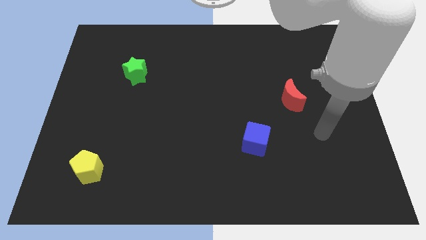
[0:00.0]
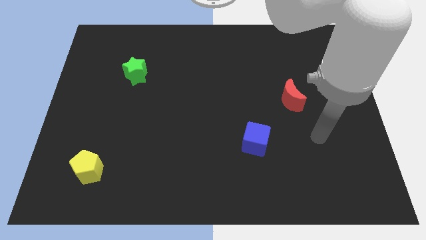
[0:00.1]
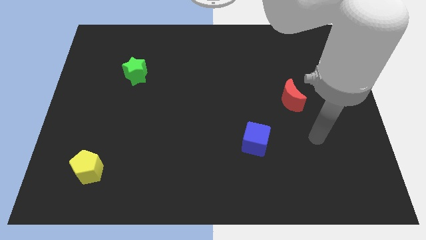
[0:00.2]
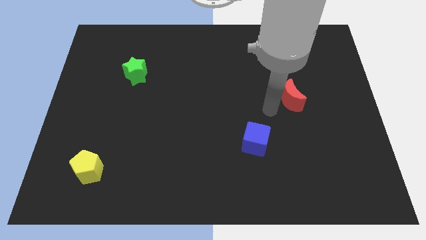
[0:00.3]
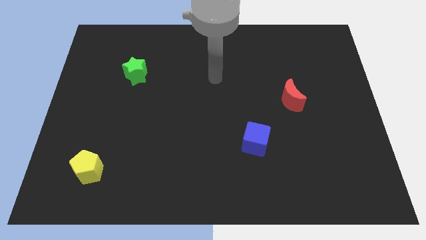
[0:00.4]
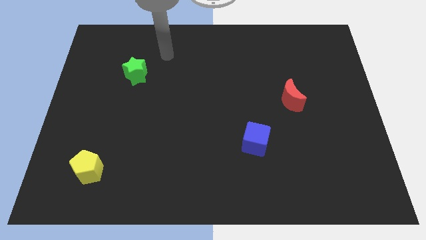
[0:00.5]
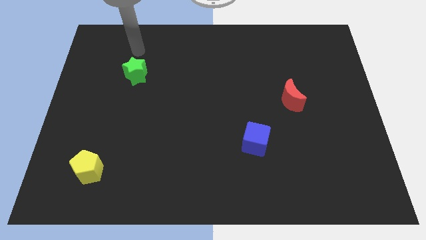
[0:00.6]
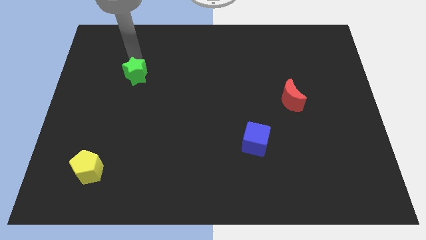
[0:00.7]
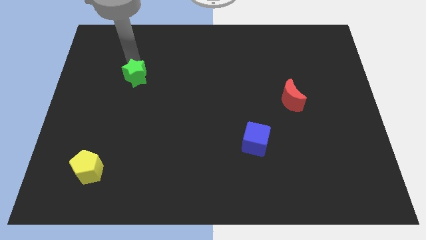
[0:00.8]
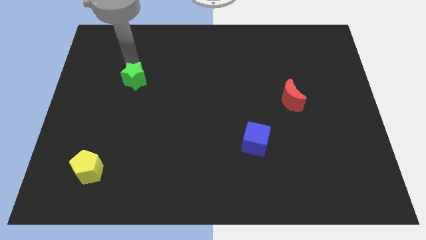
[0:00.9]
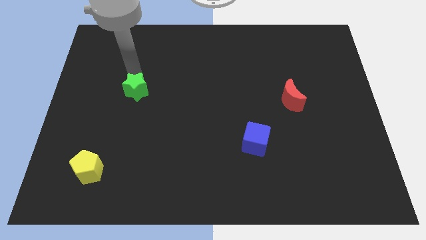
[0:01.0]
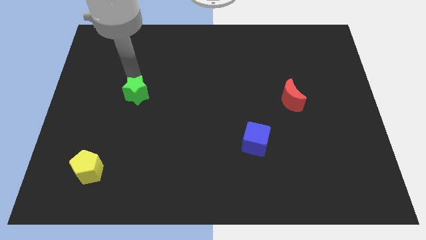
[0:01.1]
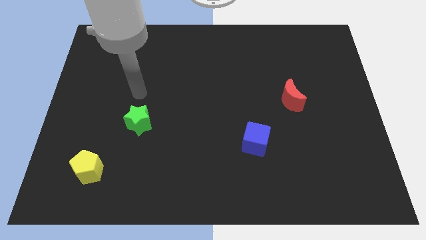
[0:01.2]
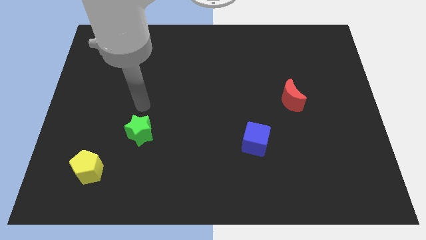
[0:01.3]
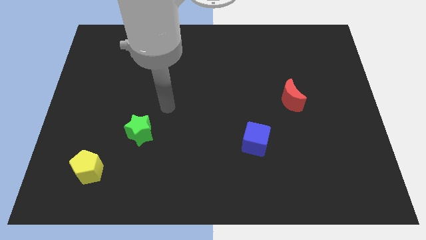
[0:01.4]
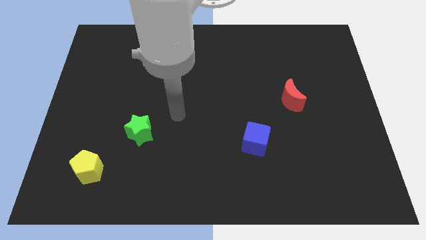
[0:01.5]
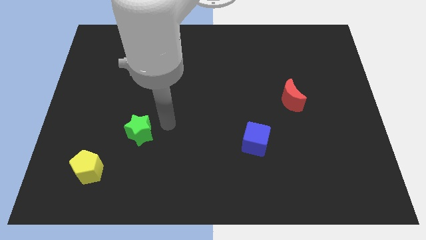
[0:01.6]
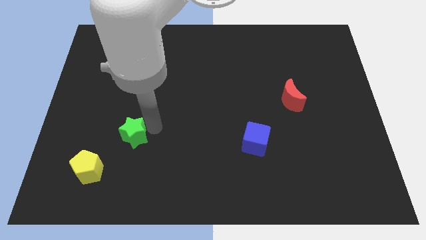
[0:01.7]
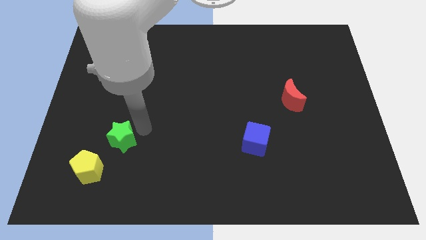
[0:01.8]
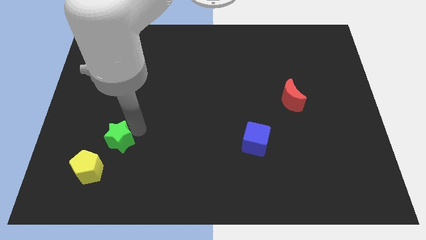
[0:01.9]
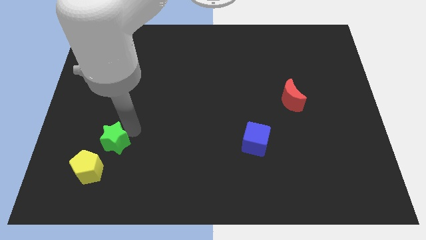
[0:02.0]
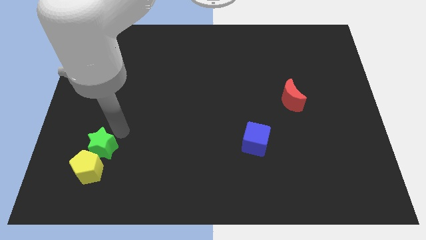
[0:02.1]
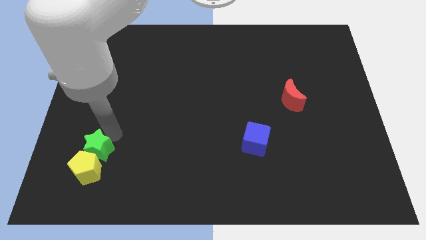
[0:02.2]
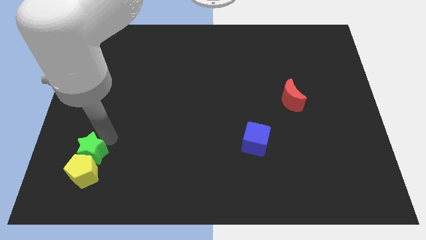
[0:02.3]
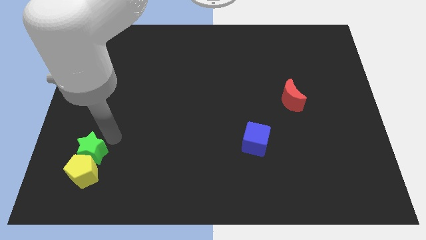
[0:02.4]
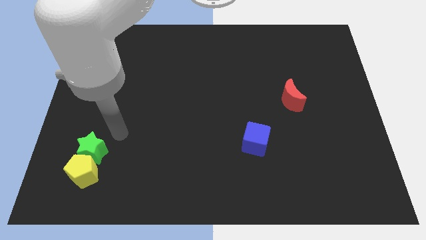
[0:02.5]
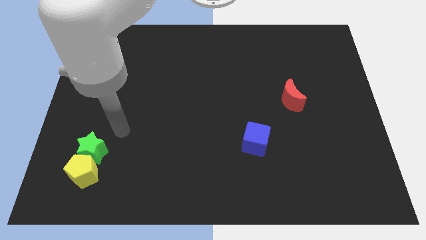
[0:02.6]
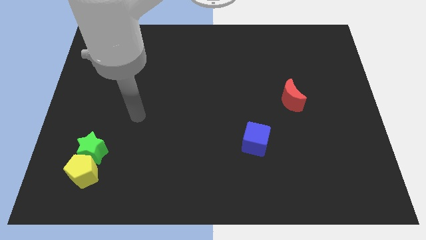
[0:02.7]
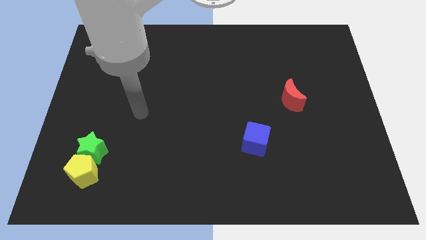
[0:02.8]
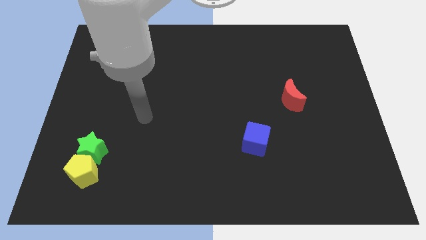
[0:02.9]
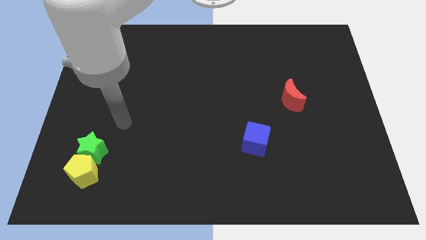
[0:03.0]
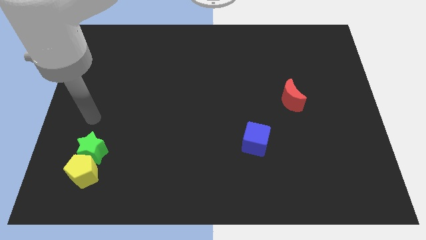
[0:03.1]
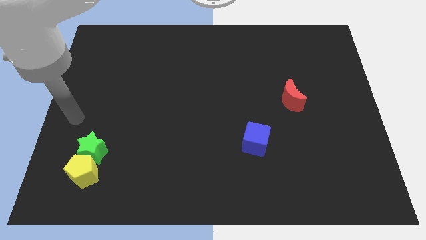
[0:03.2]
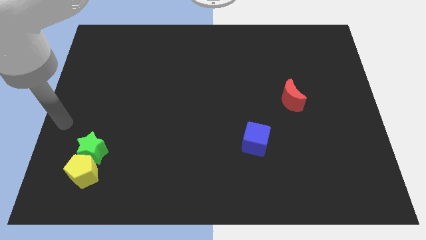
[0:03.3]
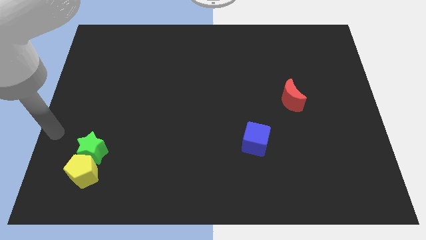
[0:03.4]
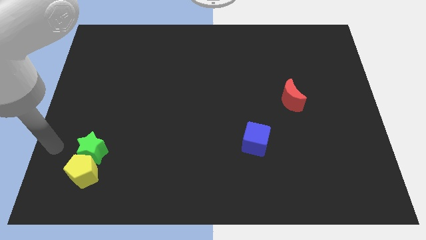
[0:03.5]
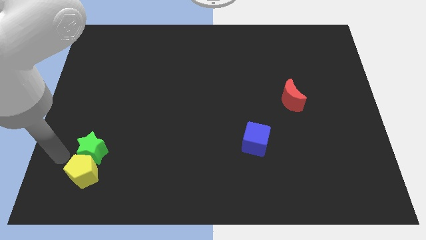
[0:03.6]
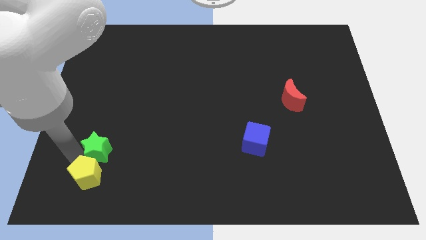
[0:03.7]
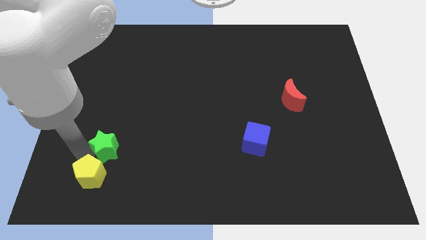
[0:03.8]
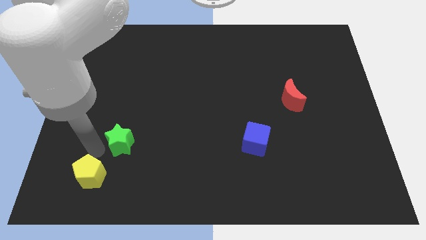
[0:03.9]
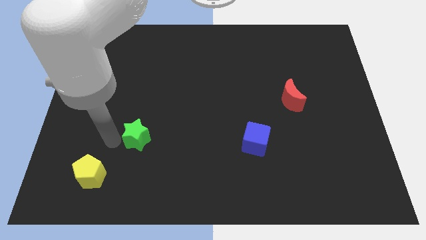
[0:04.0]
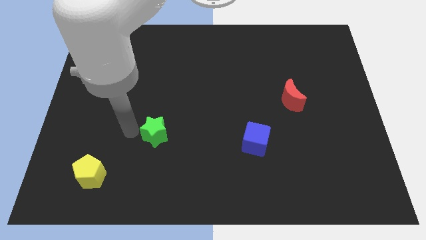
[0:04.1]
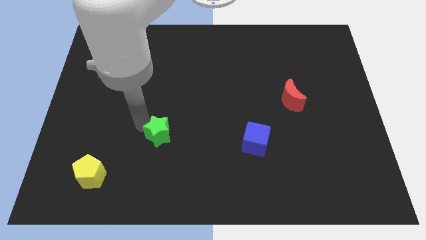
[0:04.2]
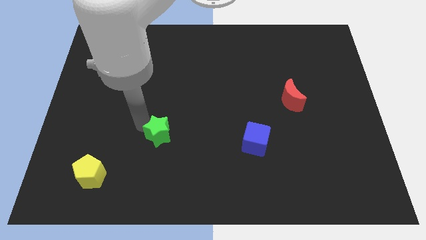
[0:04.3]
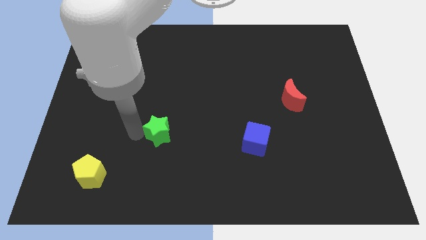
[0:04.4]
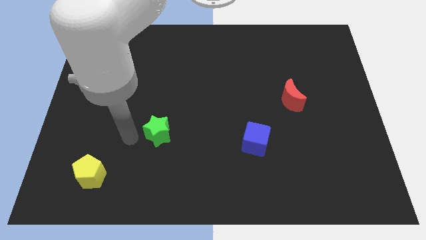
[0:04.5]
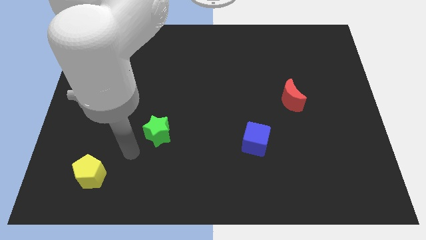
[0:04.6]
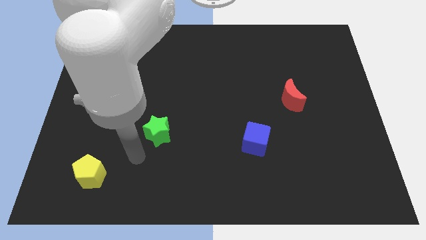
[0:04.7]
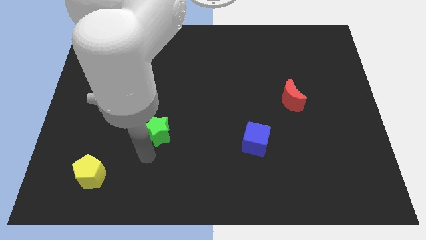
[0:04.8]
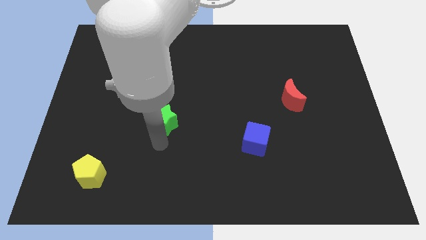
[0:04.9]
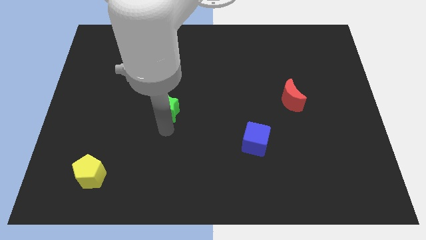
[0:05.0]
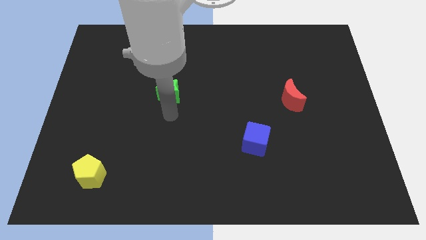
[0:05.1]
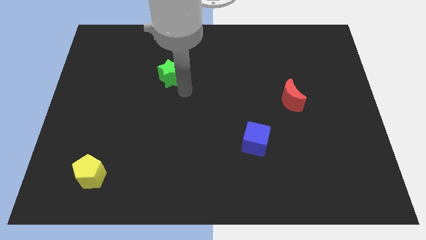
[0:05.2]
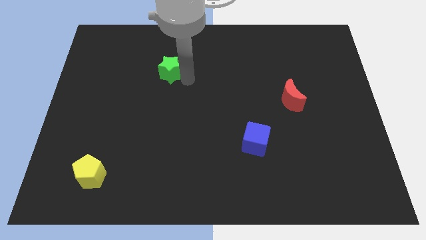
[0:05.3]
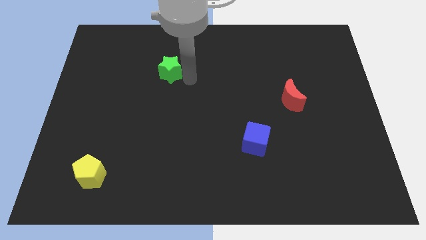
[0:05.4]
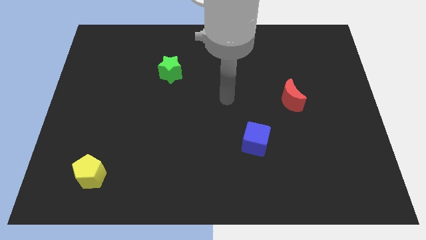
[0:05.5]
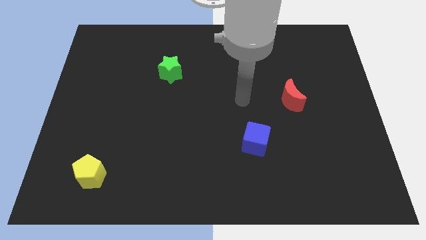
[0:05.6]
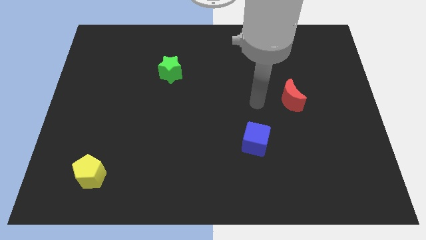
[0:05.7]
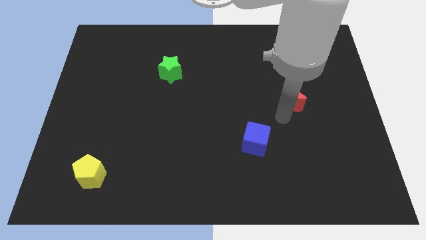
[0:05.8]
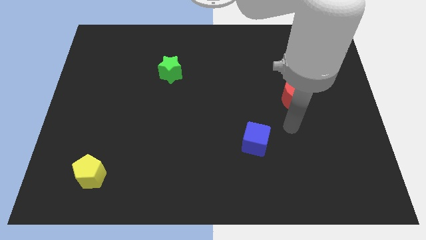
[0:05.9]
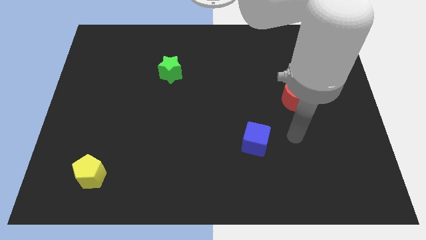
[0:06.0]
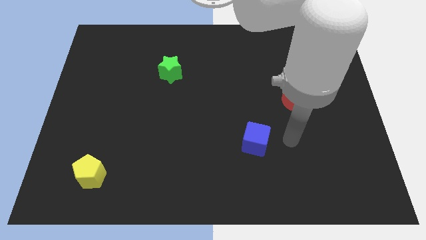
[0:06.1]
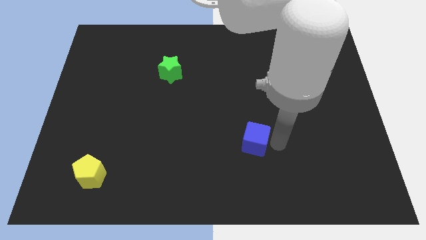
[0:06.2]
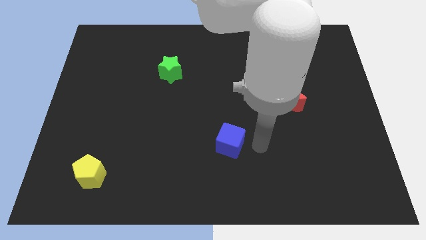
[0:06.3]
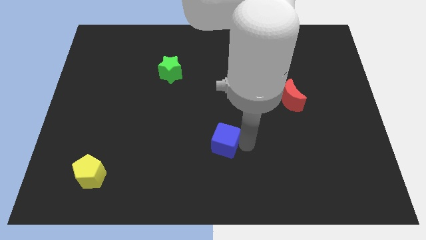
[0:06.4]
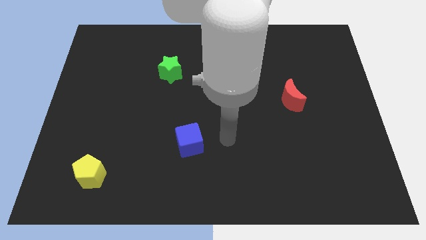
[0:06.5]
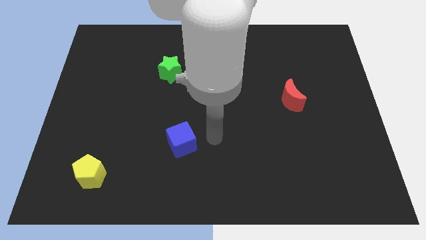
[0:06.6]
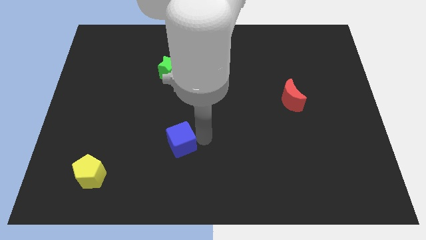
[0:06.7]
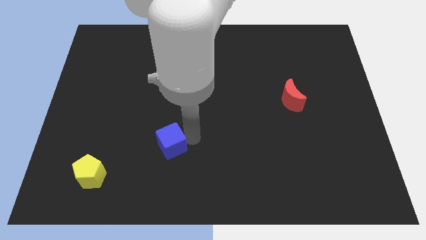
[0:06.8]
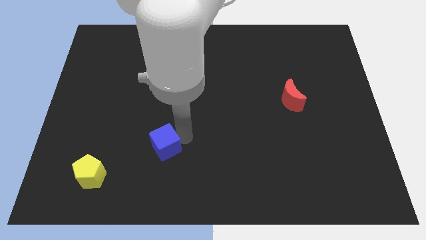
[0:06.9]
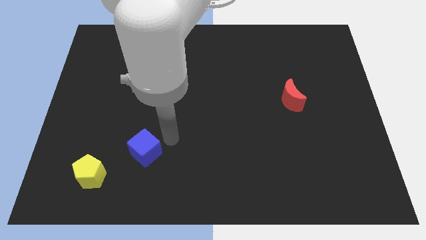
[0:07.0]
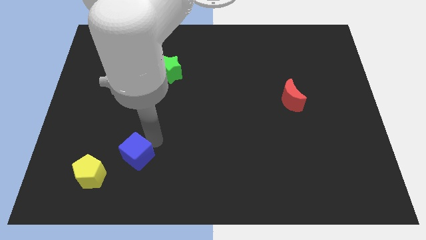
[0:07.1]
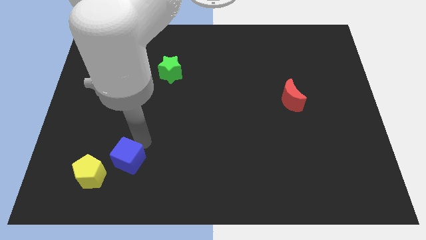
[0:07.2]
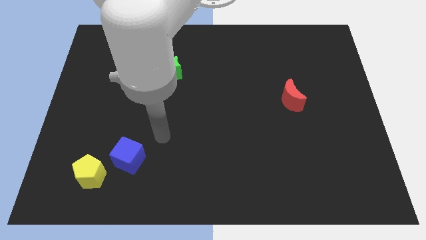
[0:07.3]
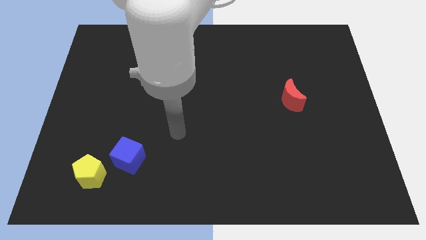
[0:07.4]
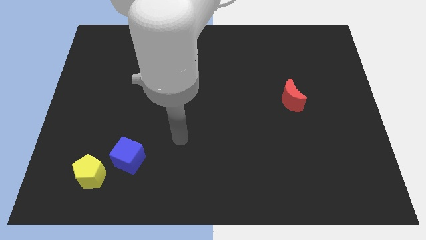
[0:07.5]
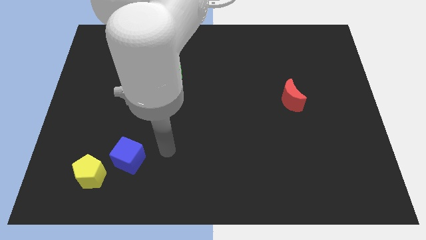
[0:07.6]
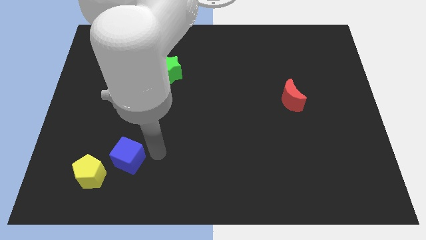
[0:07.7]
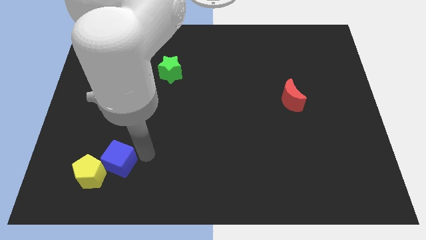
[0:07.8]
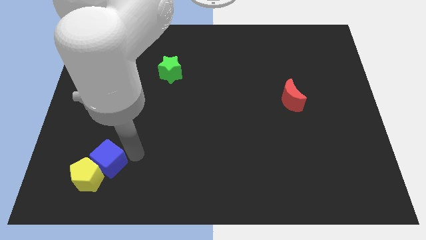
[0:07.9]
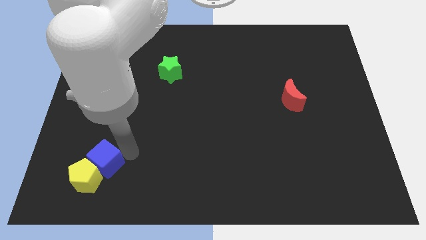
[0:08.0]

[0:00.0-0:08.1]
put the blue cube next to the pentagon

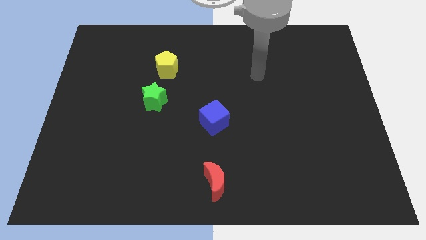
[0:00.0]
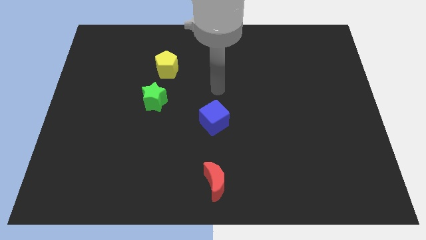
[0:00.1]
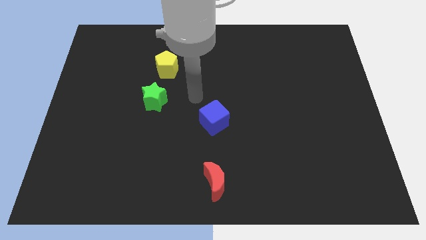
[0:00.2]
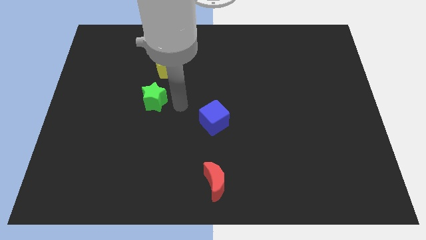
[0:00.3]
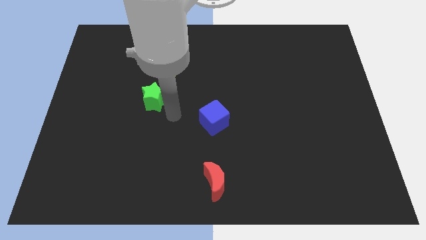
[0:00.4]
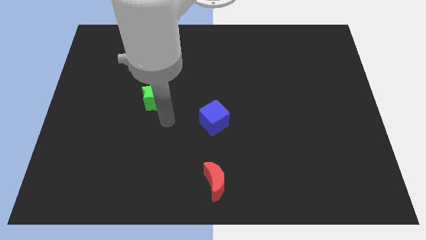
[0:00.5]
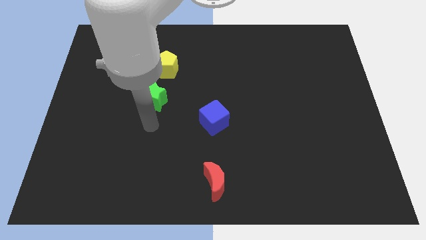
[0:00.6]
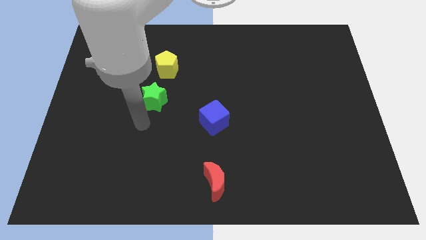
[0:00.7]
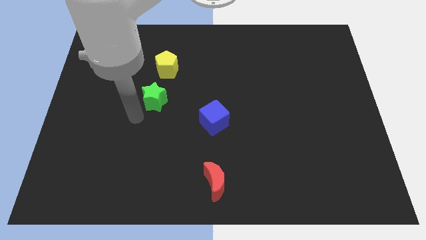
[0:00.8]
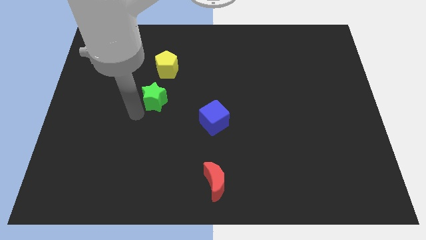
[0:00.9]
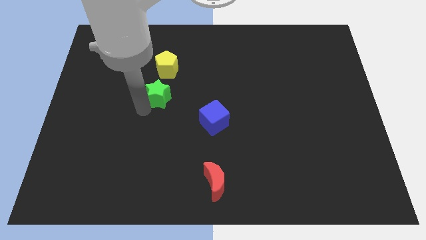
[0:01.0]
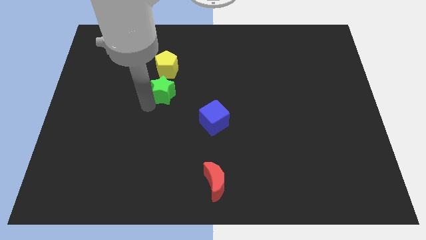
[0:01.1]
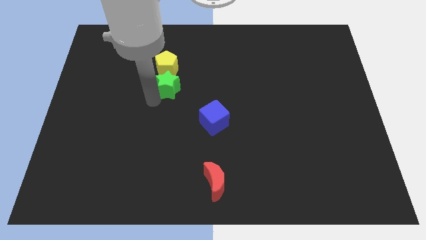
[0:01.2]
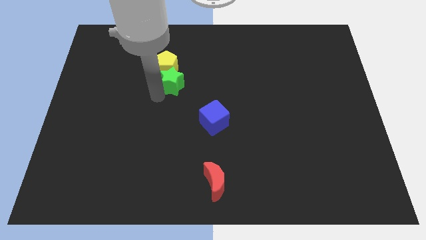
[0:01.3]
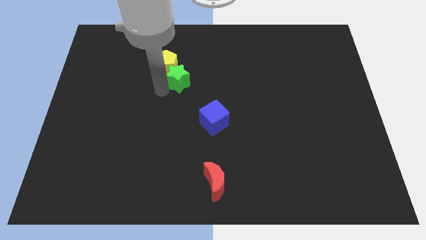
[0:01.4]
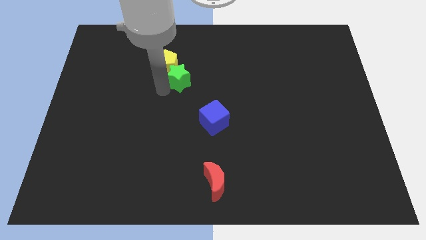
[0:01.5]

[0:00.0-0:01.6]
put the star towards the yellow pentagon
